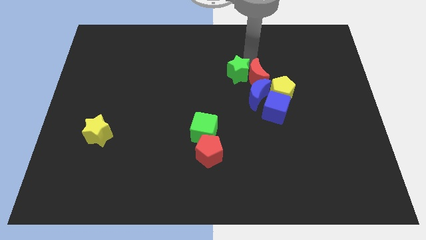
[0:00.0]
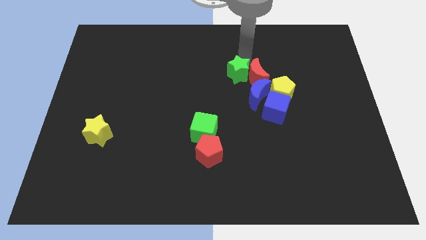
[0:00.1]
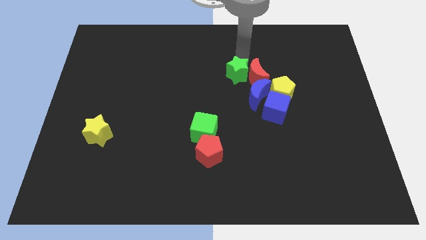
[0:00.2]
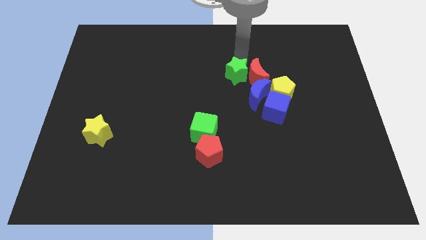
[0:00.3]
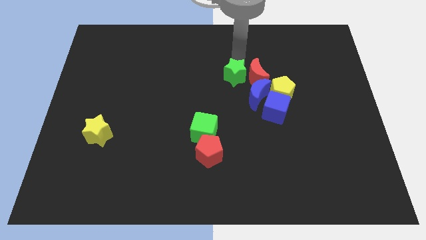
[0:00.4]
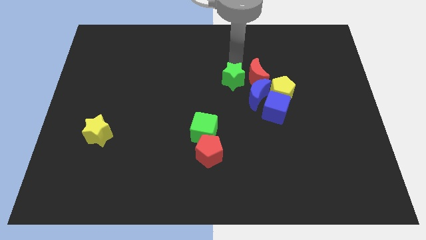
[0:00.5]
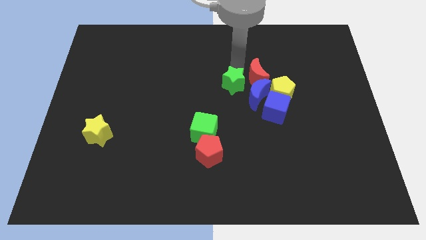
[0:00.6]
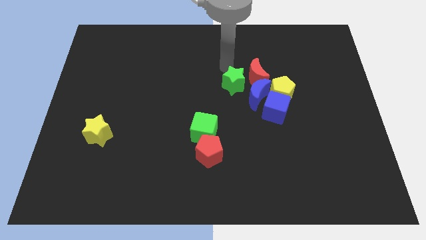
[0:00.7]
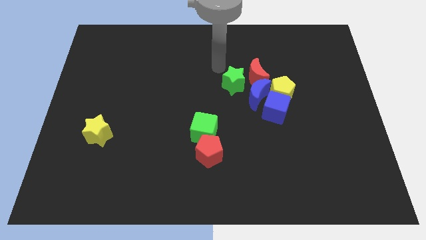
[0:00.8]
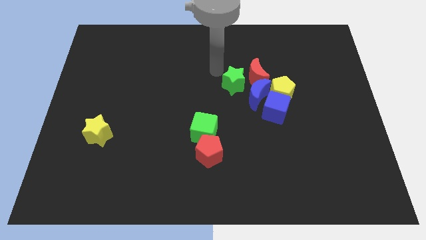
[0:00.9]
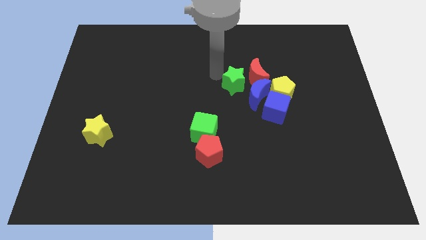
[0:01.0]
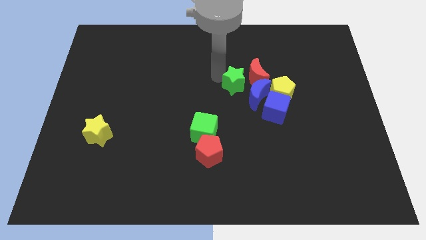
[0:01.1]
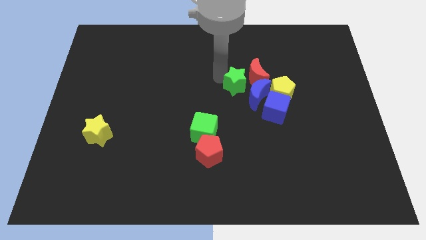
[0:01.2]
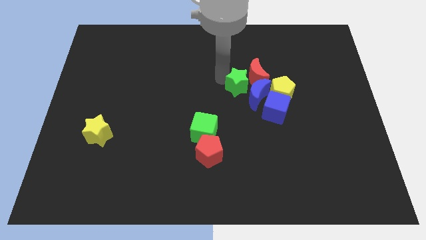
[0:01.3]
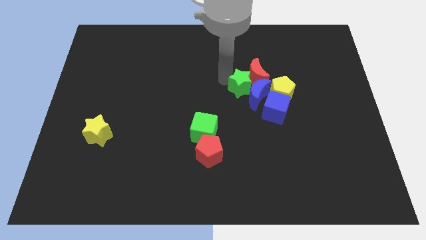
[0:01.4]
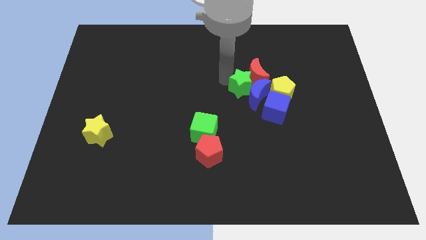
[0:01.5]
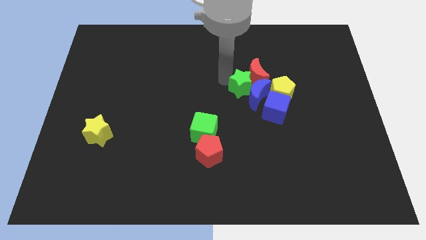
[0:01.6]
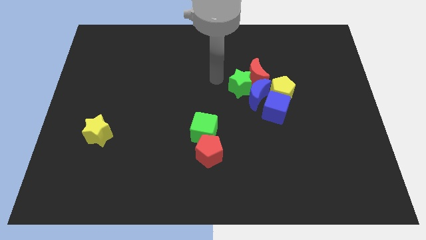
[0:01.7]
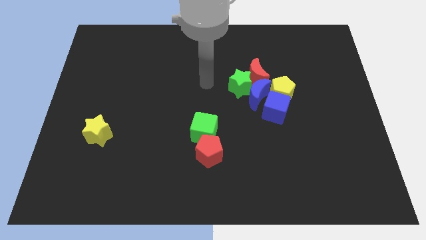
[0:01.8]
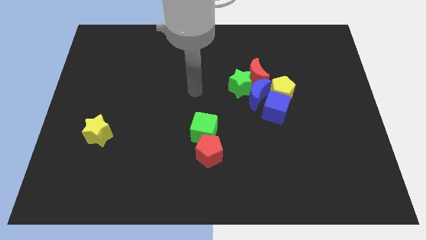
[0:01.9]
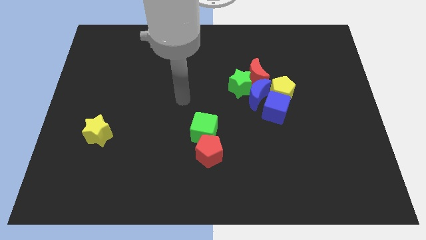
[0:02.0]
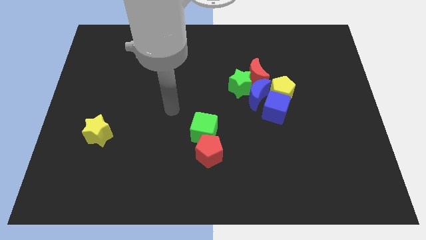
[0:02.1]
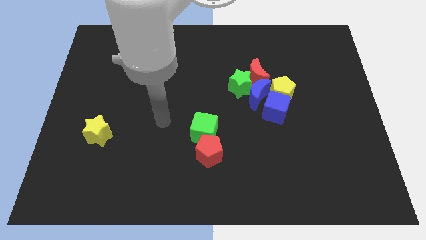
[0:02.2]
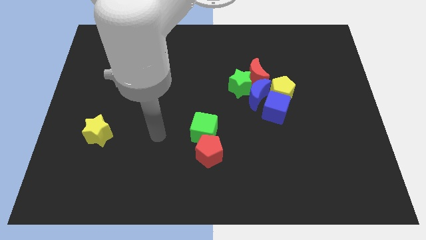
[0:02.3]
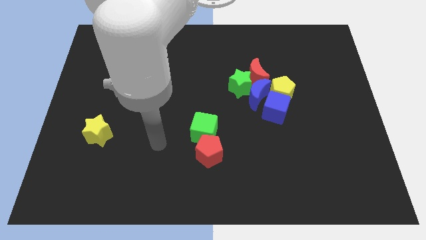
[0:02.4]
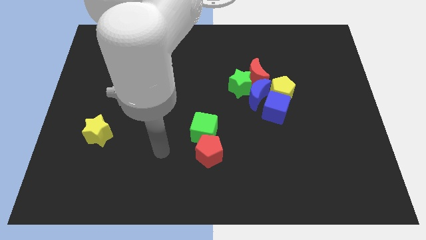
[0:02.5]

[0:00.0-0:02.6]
place the green star left to the blue moon

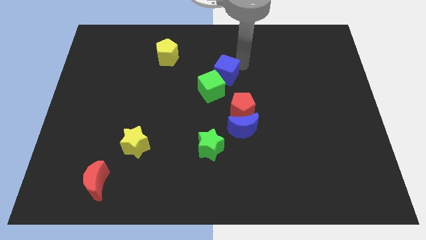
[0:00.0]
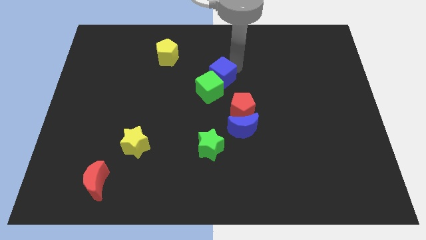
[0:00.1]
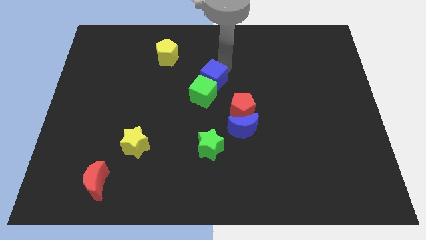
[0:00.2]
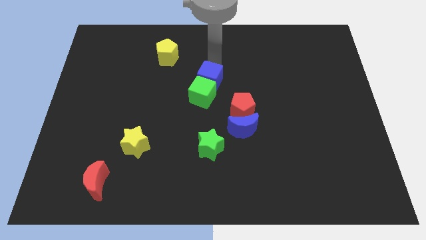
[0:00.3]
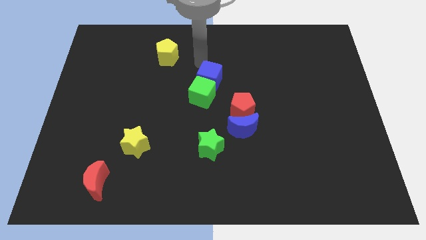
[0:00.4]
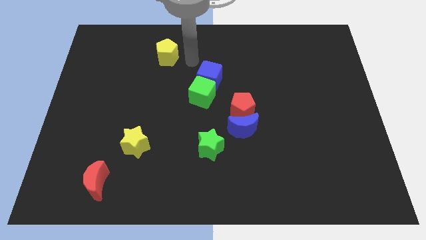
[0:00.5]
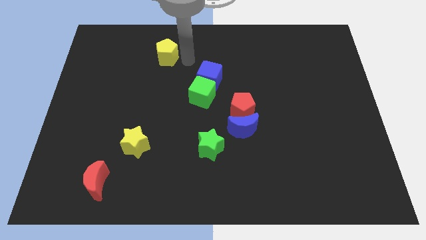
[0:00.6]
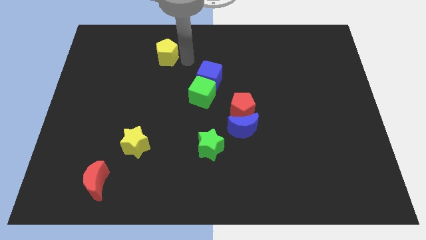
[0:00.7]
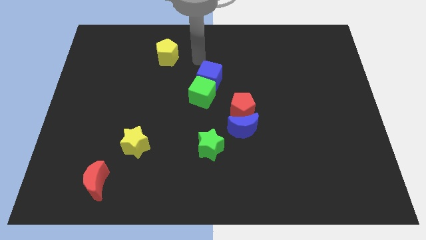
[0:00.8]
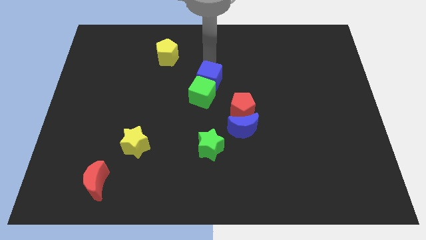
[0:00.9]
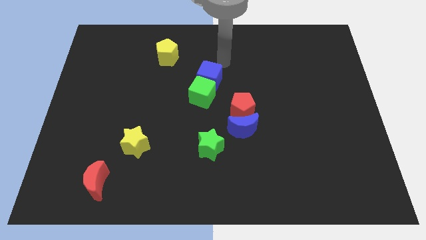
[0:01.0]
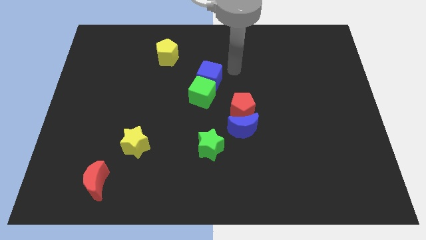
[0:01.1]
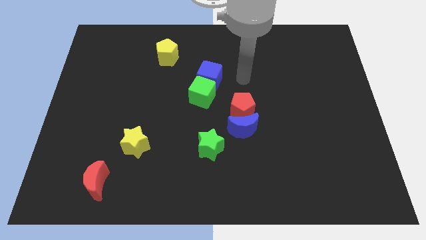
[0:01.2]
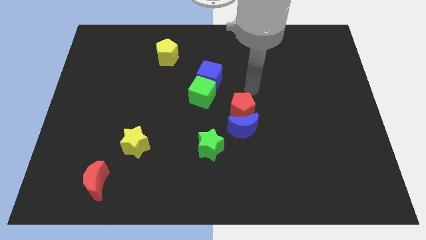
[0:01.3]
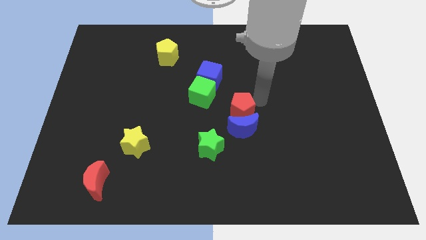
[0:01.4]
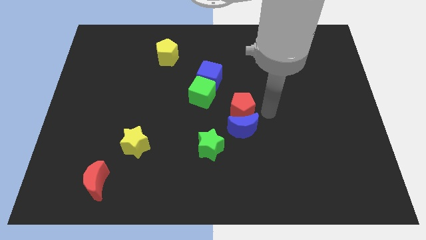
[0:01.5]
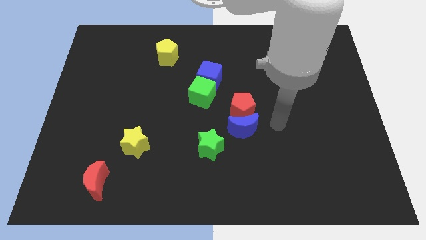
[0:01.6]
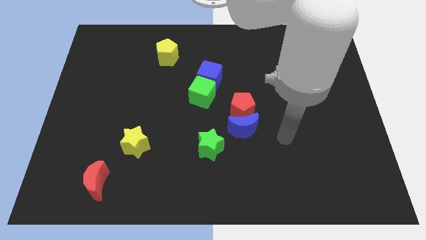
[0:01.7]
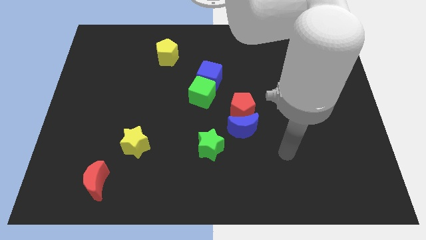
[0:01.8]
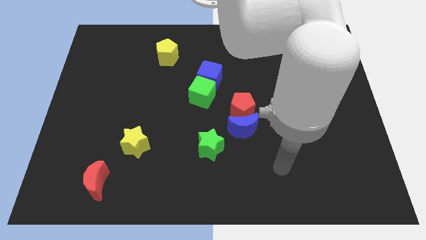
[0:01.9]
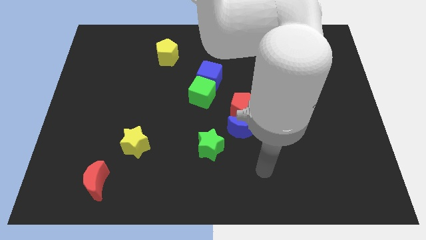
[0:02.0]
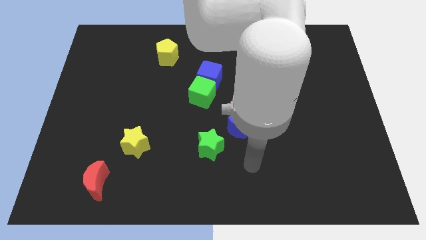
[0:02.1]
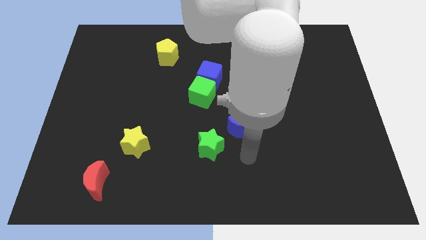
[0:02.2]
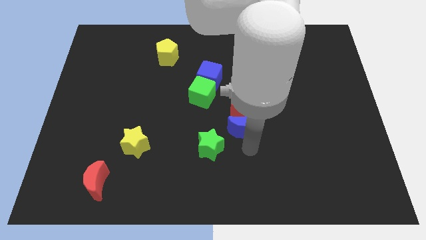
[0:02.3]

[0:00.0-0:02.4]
go near blue moon

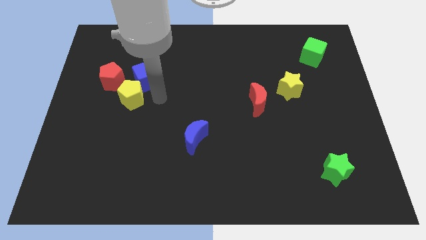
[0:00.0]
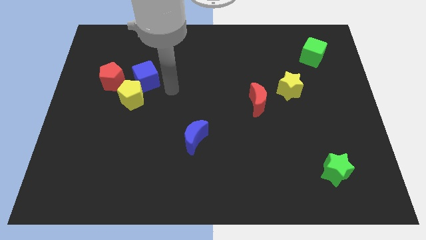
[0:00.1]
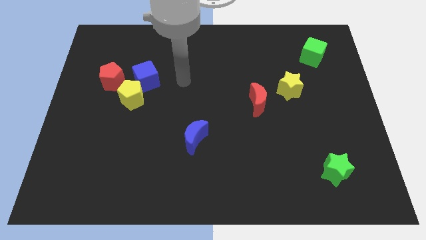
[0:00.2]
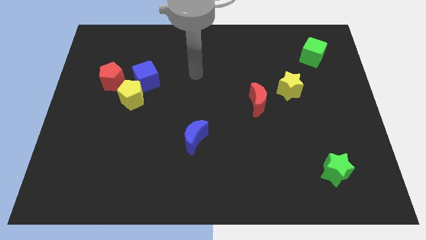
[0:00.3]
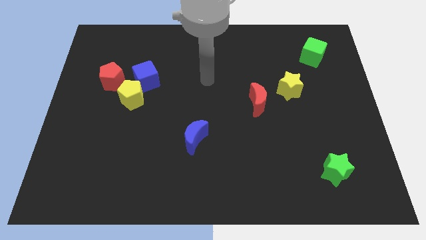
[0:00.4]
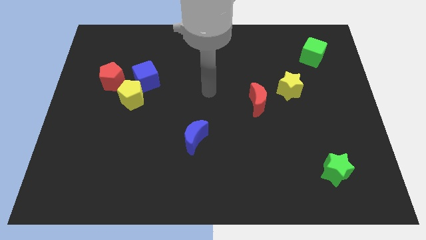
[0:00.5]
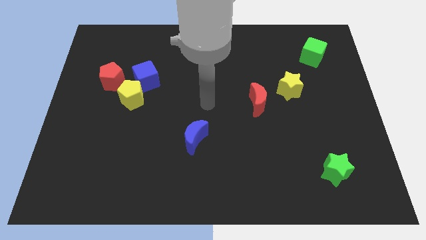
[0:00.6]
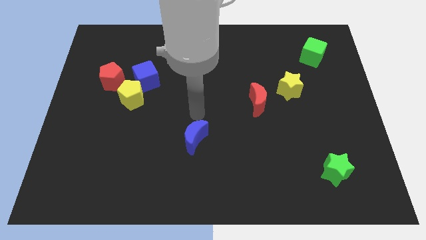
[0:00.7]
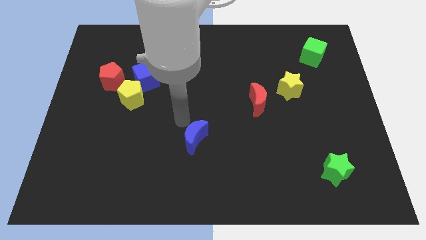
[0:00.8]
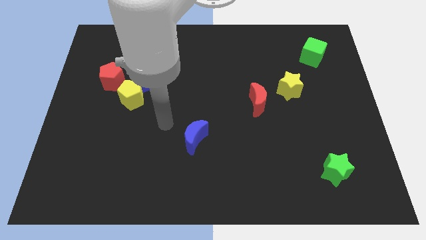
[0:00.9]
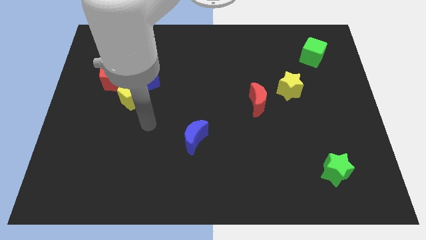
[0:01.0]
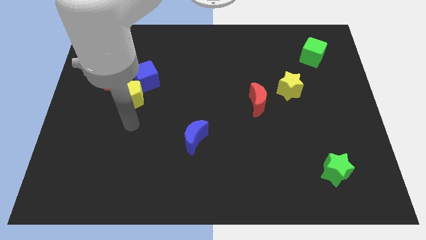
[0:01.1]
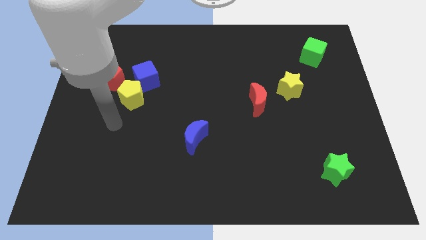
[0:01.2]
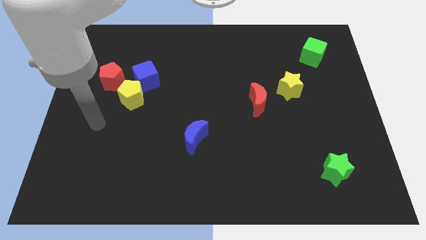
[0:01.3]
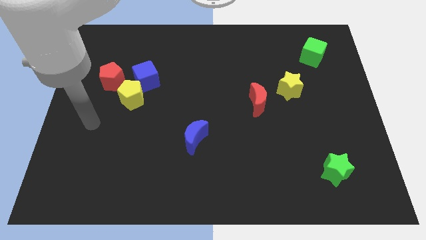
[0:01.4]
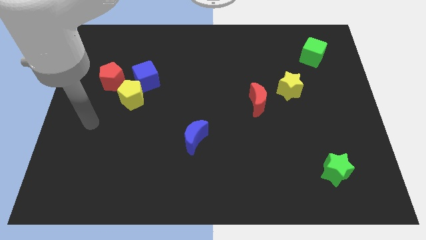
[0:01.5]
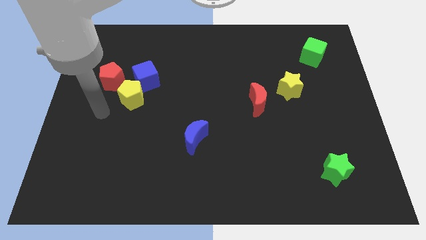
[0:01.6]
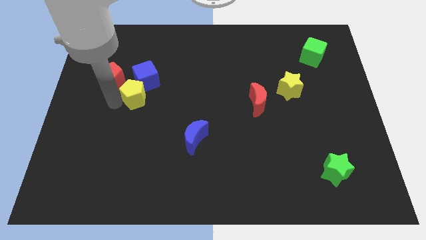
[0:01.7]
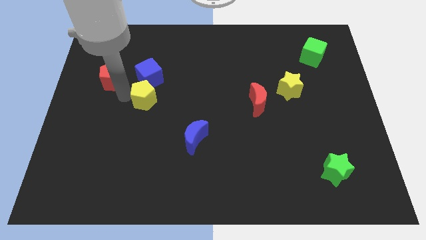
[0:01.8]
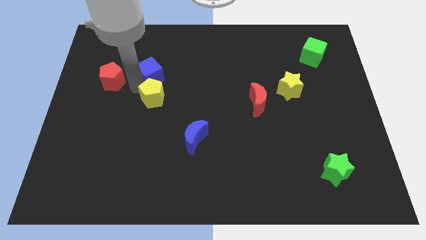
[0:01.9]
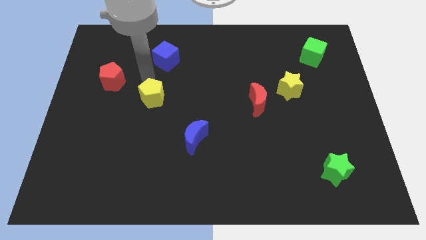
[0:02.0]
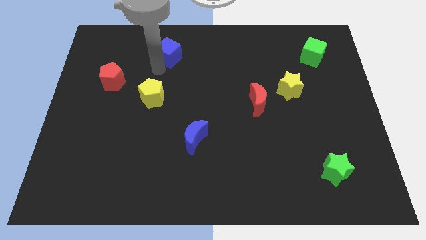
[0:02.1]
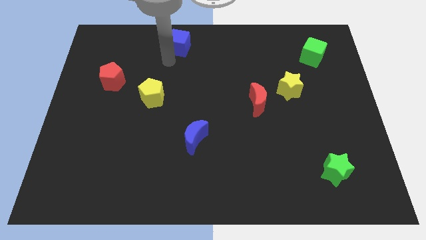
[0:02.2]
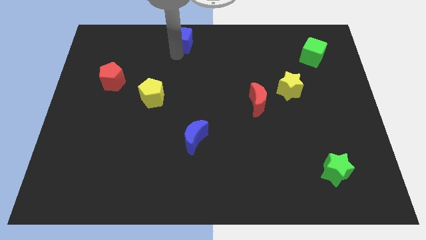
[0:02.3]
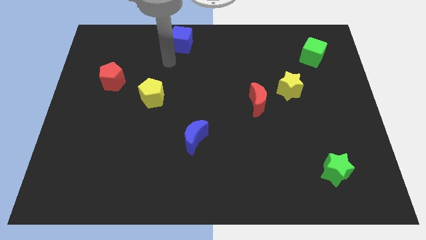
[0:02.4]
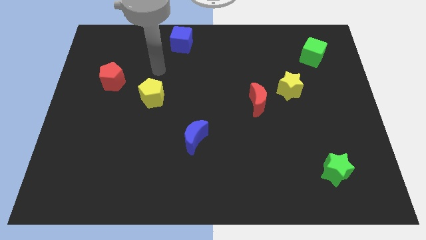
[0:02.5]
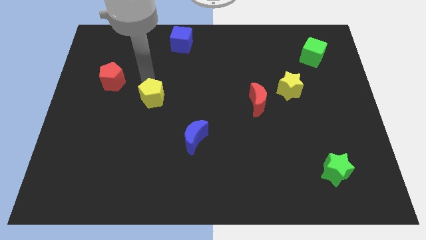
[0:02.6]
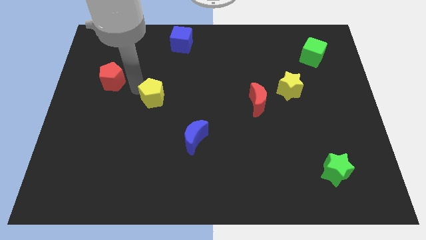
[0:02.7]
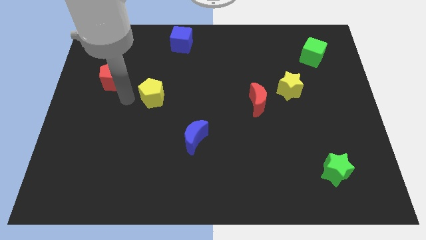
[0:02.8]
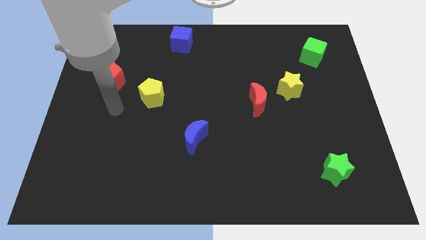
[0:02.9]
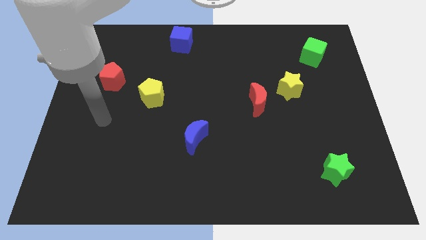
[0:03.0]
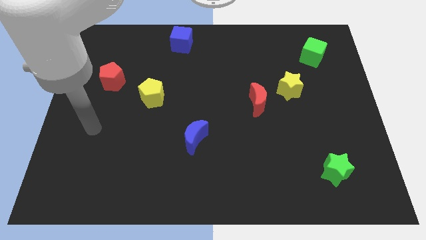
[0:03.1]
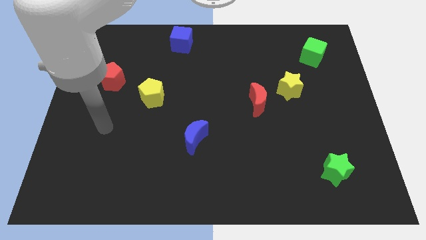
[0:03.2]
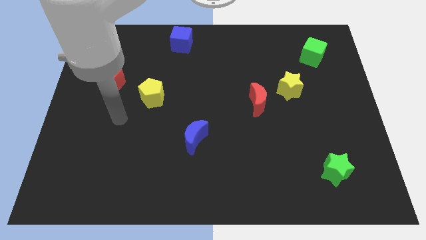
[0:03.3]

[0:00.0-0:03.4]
separate the blue cube from yellow pentagon

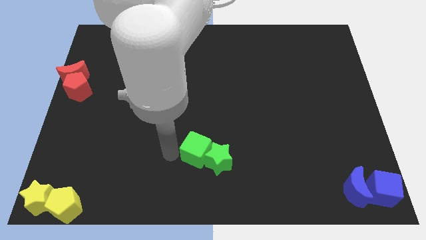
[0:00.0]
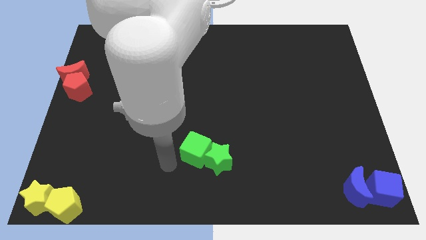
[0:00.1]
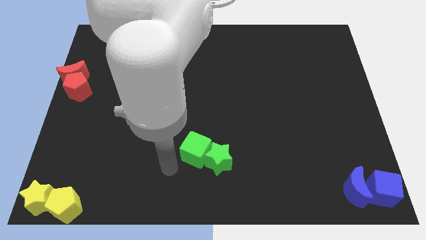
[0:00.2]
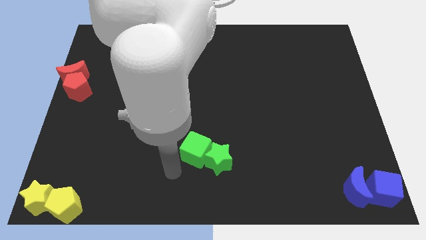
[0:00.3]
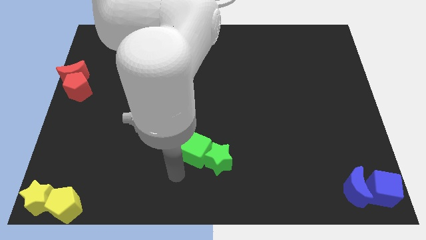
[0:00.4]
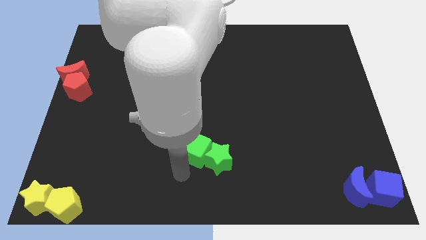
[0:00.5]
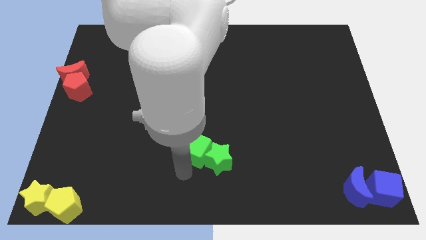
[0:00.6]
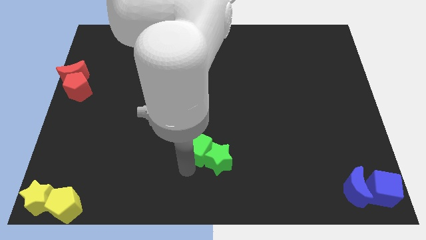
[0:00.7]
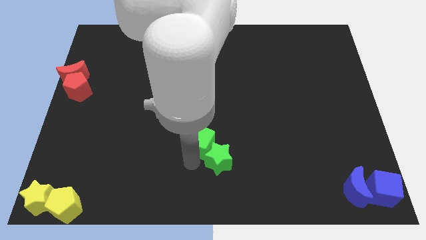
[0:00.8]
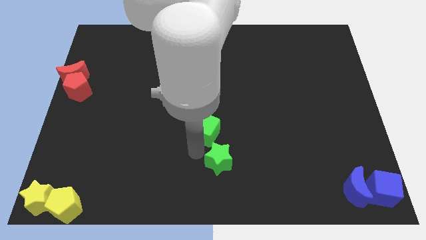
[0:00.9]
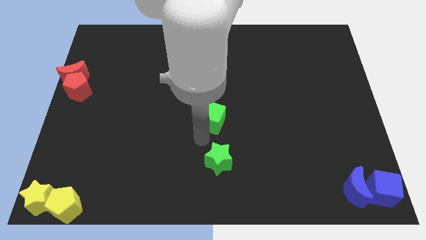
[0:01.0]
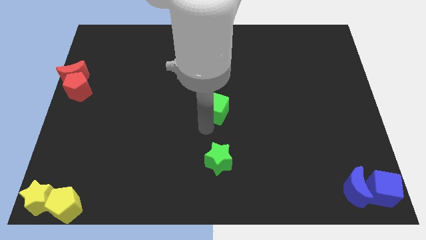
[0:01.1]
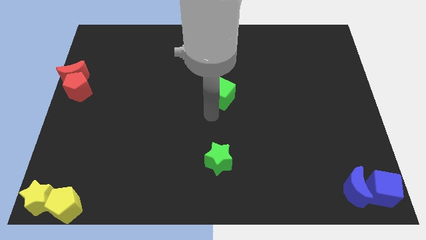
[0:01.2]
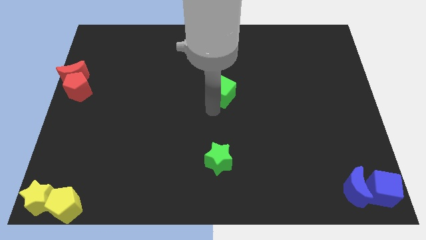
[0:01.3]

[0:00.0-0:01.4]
move the green cube slightly up
